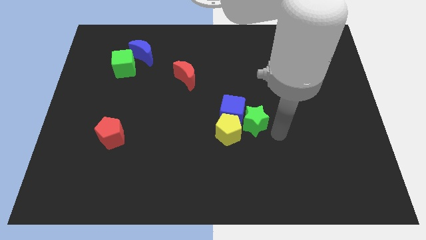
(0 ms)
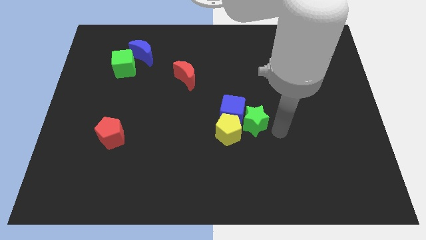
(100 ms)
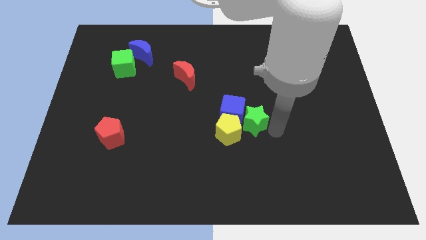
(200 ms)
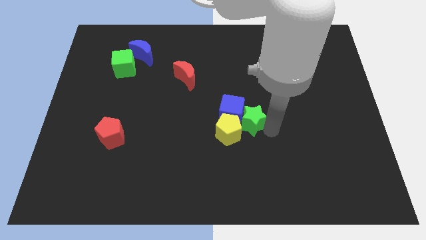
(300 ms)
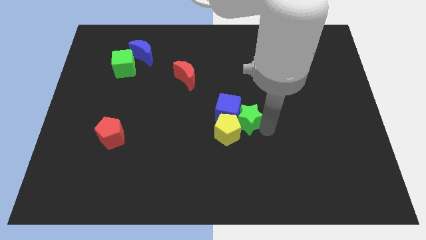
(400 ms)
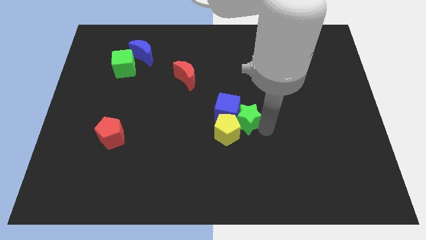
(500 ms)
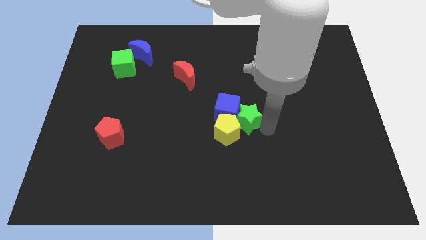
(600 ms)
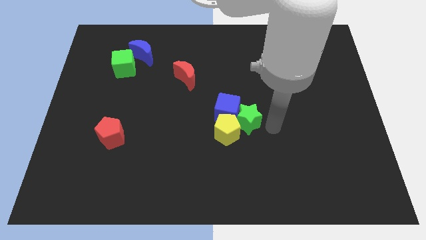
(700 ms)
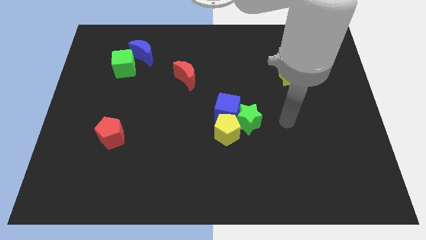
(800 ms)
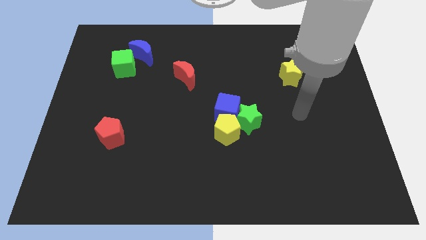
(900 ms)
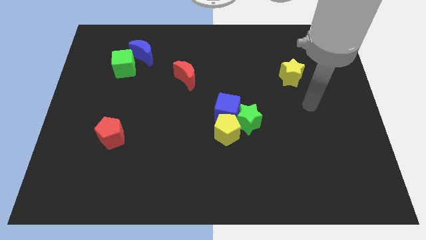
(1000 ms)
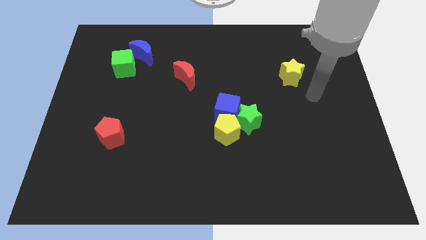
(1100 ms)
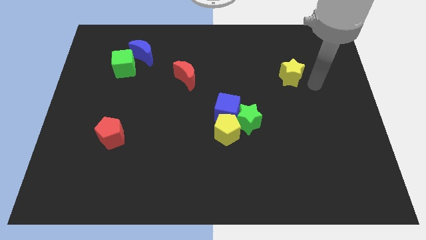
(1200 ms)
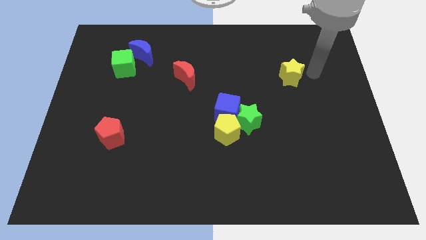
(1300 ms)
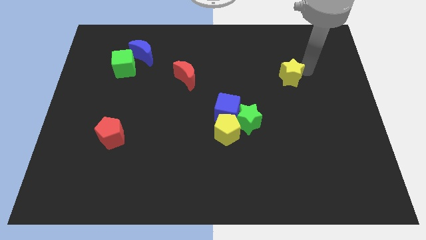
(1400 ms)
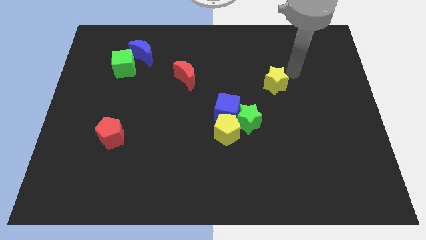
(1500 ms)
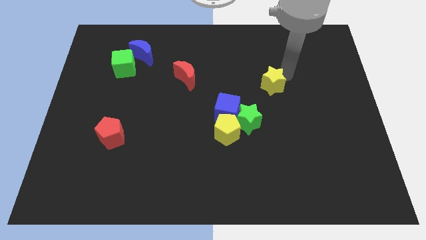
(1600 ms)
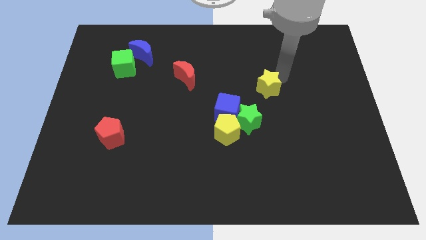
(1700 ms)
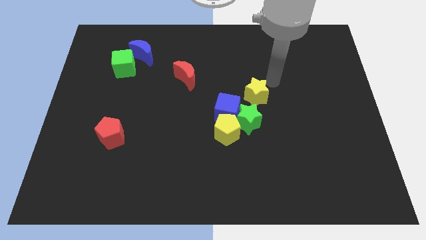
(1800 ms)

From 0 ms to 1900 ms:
move the yellow star to the top of the green star

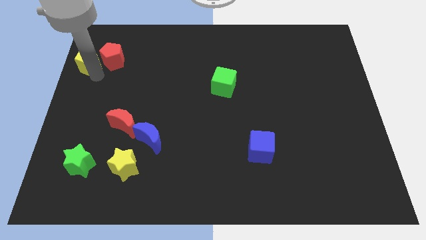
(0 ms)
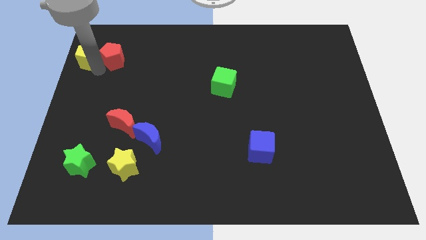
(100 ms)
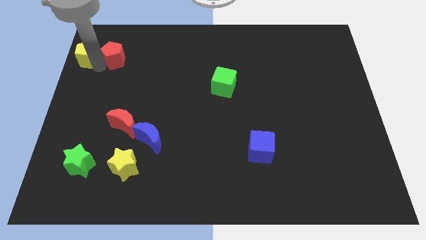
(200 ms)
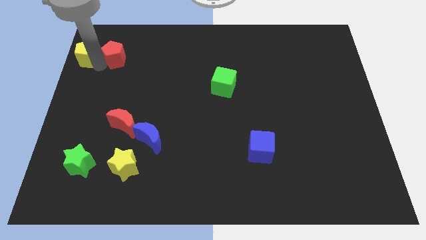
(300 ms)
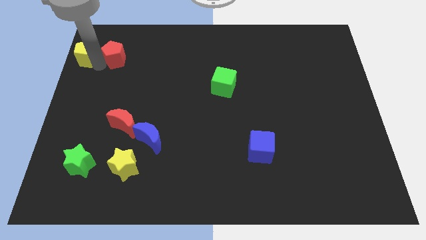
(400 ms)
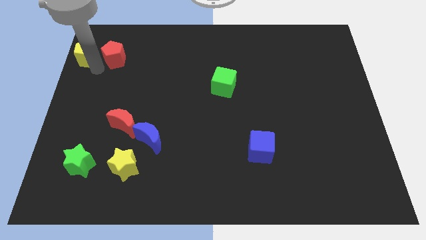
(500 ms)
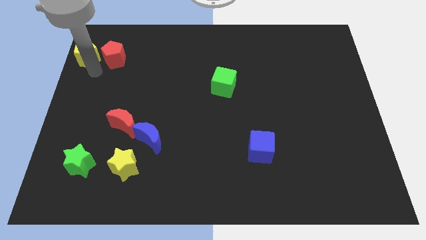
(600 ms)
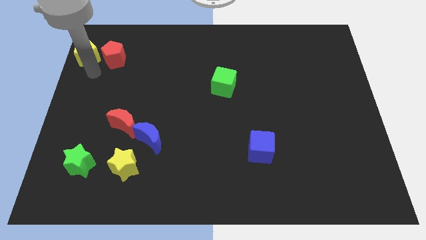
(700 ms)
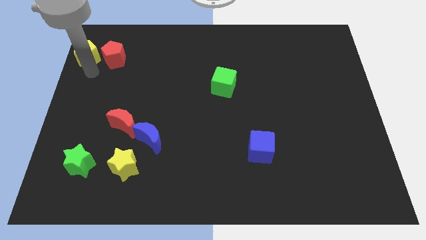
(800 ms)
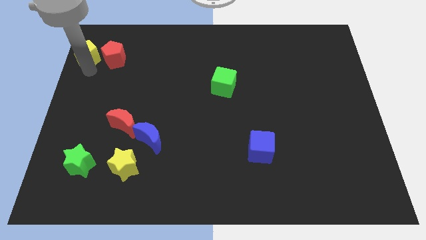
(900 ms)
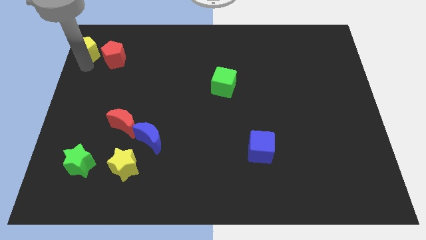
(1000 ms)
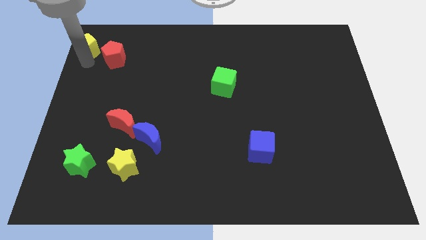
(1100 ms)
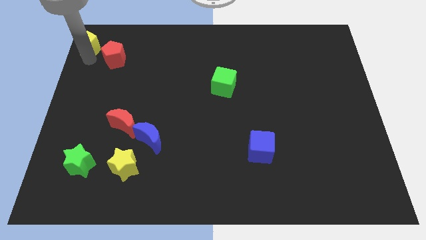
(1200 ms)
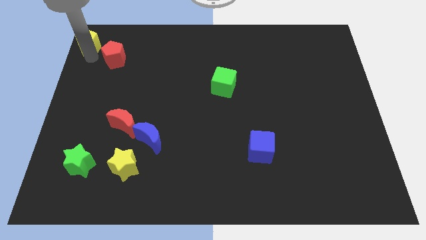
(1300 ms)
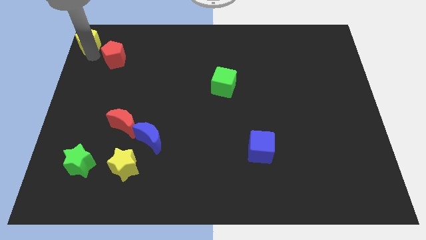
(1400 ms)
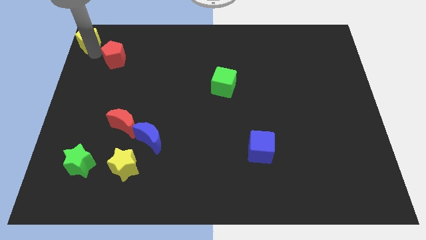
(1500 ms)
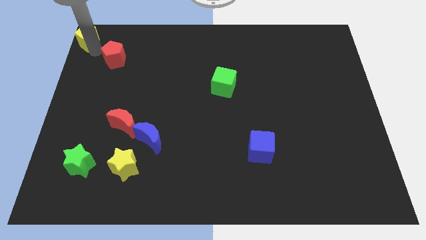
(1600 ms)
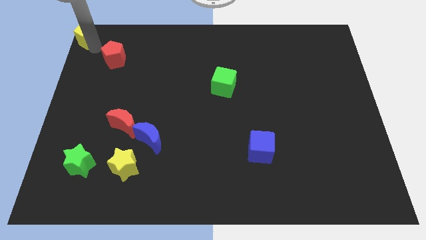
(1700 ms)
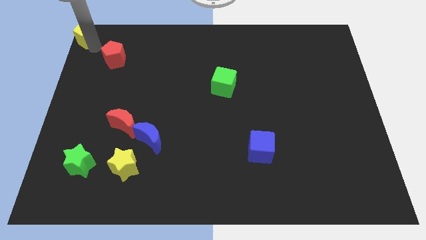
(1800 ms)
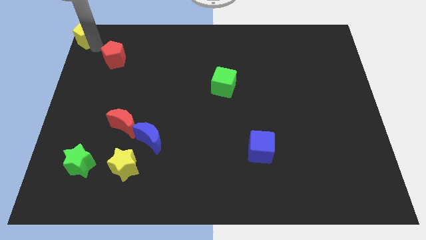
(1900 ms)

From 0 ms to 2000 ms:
place the yellow pentagon at the top left corner

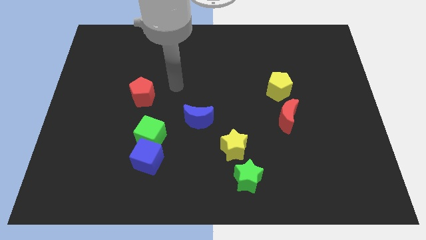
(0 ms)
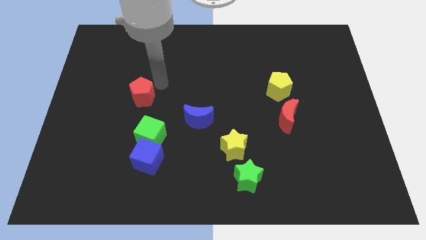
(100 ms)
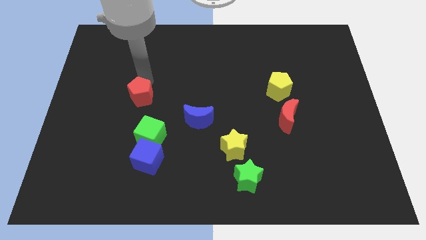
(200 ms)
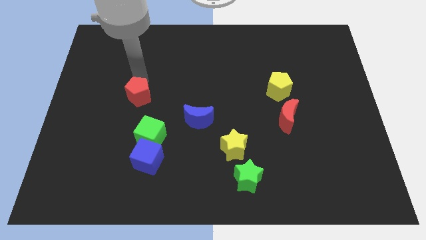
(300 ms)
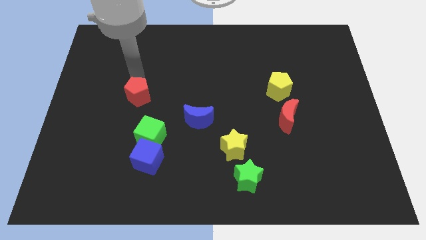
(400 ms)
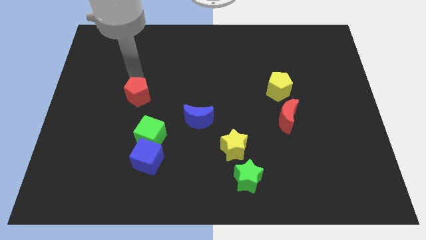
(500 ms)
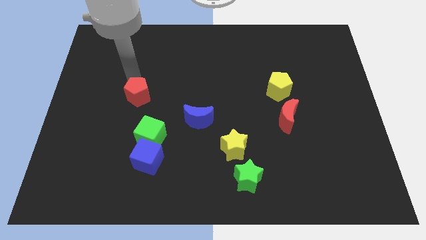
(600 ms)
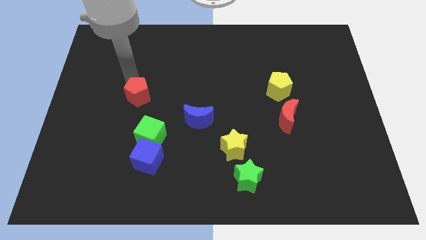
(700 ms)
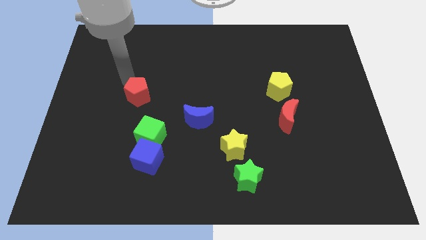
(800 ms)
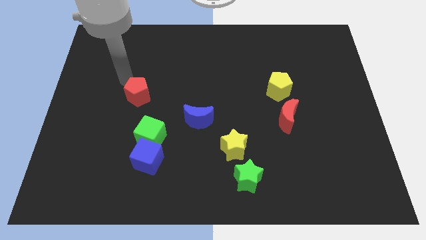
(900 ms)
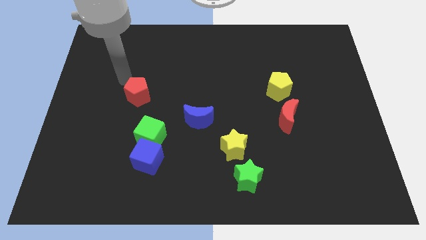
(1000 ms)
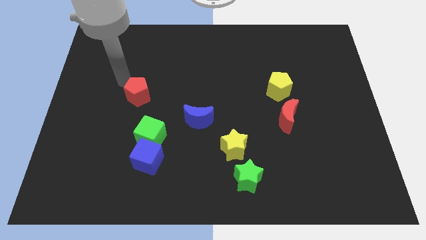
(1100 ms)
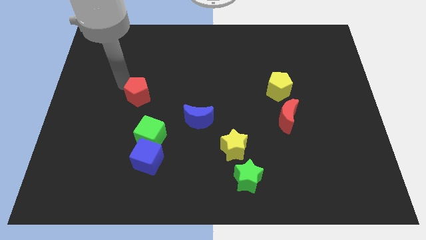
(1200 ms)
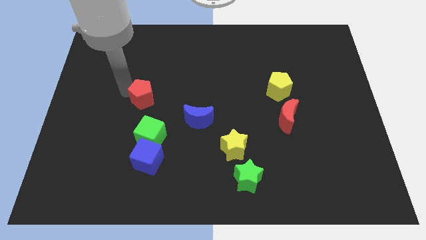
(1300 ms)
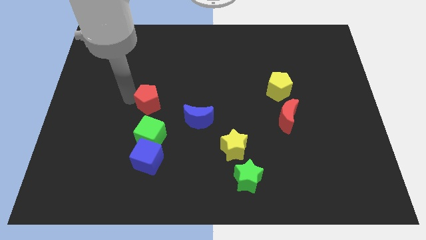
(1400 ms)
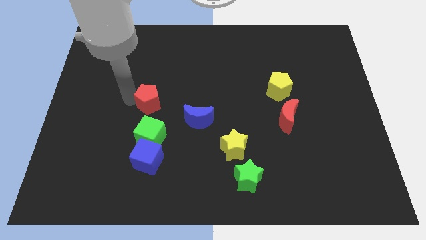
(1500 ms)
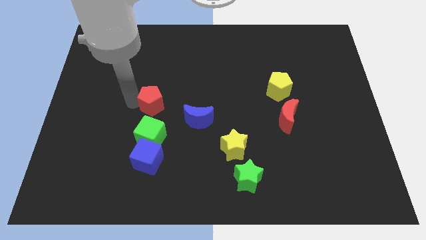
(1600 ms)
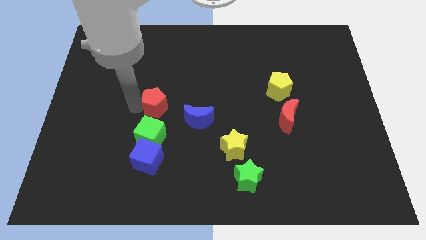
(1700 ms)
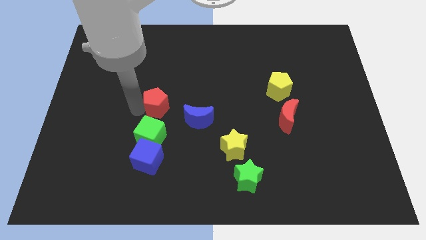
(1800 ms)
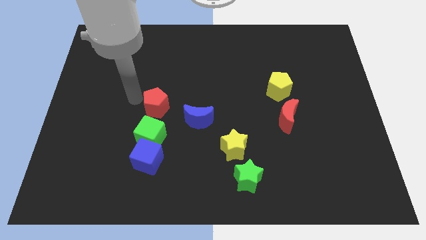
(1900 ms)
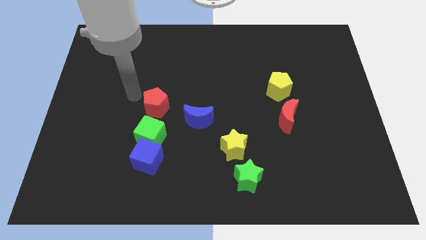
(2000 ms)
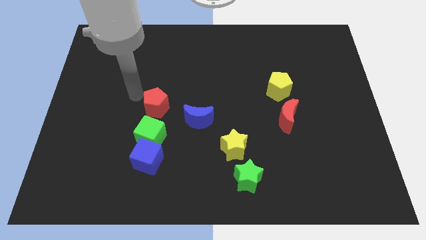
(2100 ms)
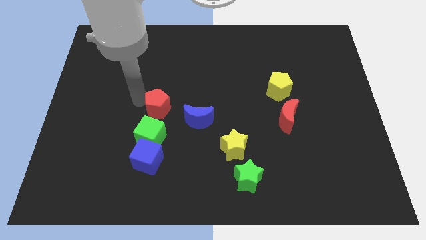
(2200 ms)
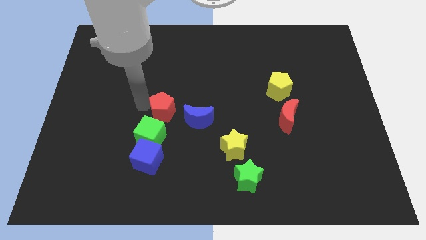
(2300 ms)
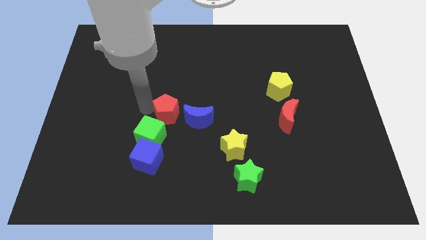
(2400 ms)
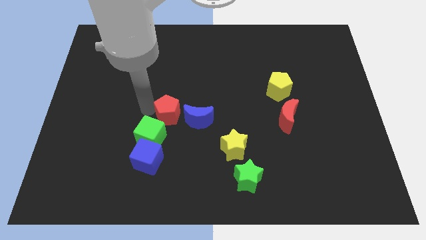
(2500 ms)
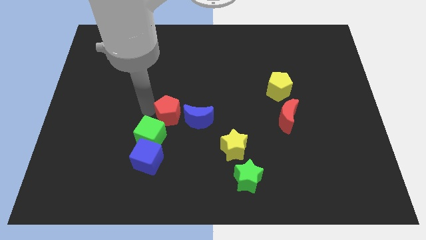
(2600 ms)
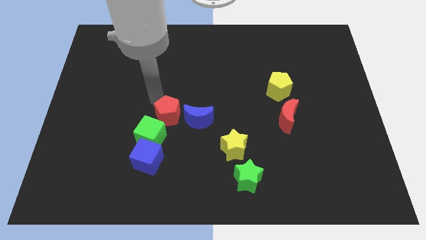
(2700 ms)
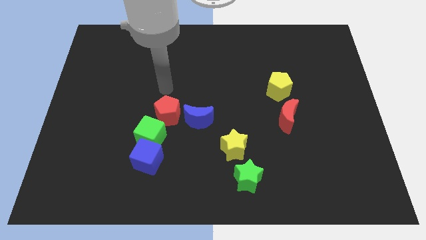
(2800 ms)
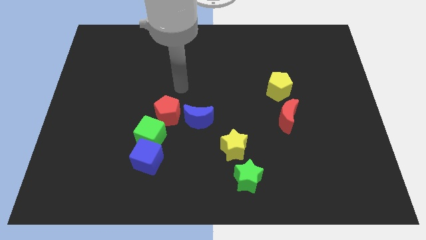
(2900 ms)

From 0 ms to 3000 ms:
put the red pentagon to the left side of blue crescent

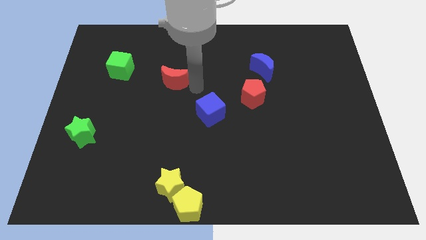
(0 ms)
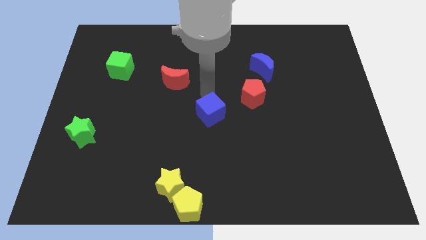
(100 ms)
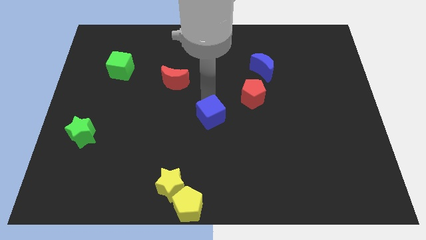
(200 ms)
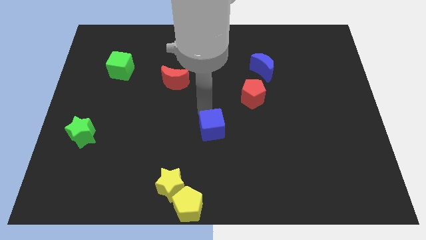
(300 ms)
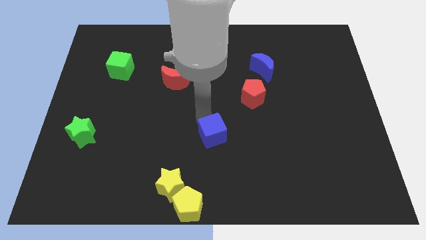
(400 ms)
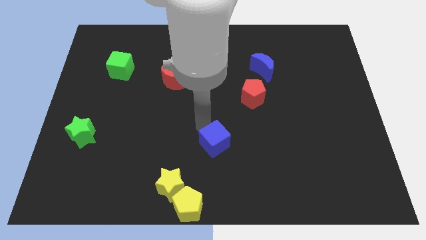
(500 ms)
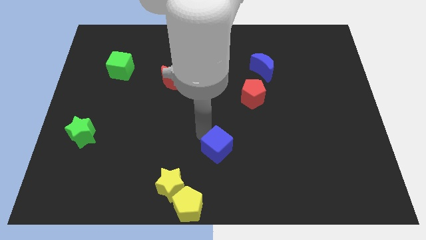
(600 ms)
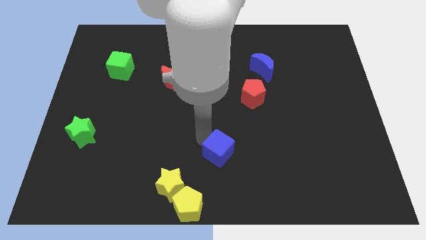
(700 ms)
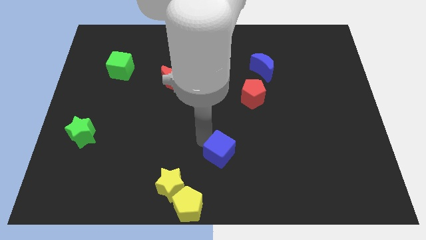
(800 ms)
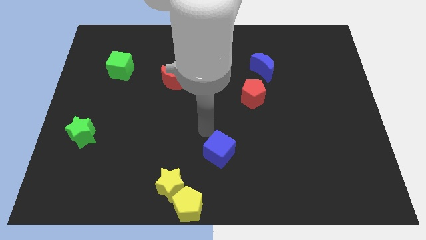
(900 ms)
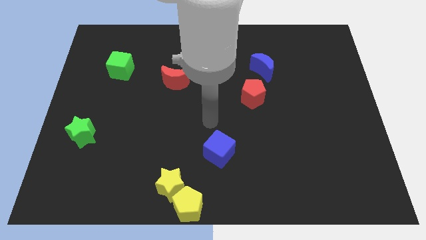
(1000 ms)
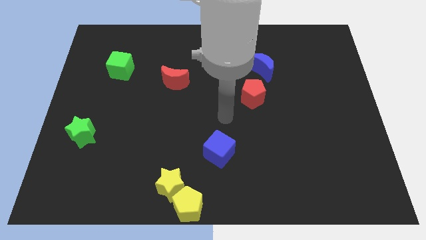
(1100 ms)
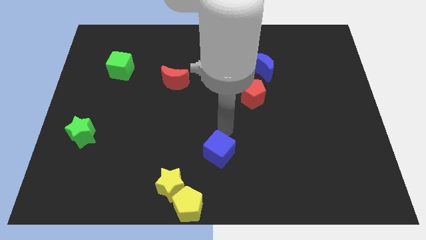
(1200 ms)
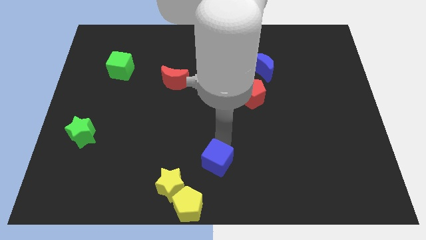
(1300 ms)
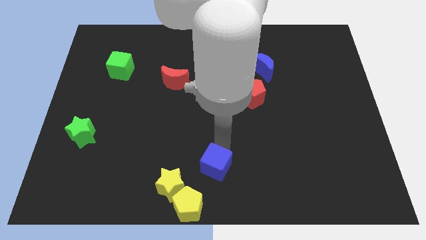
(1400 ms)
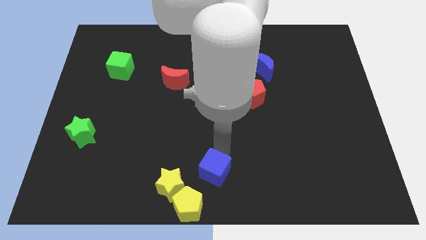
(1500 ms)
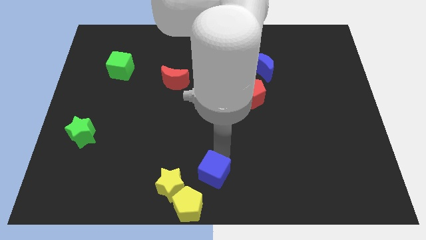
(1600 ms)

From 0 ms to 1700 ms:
drag the blue cube to the right of the yellow star

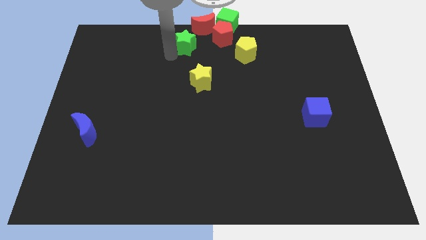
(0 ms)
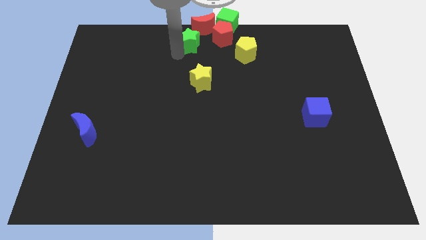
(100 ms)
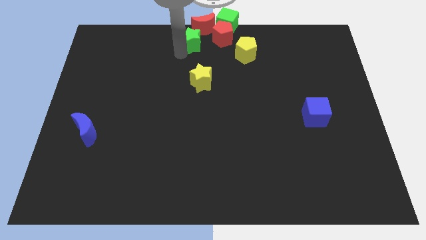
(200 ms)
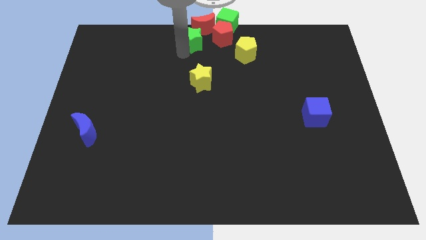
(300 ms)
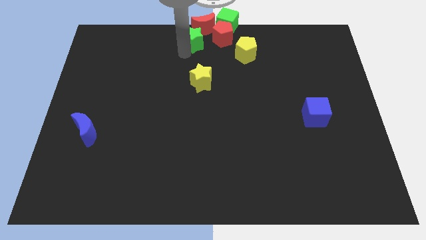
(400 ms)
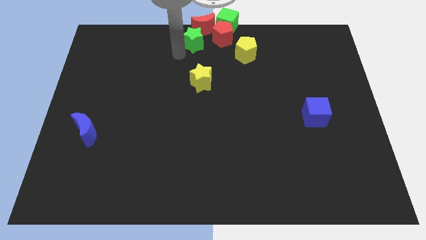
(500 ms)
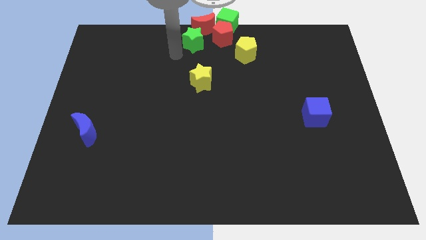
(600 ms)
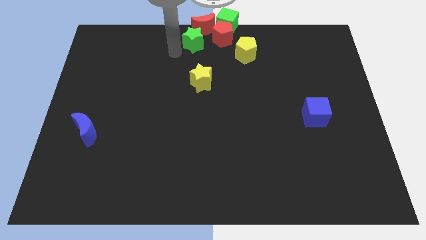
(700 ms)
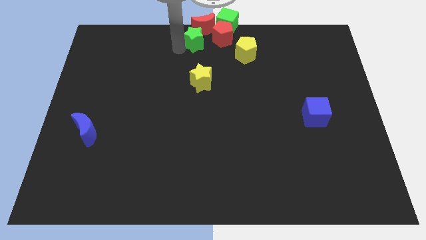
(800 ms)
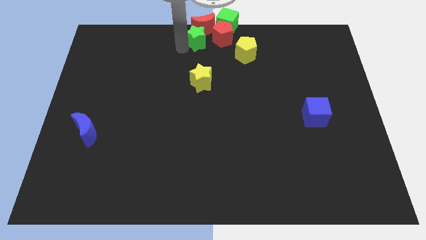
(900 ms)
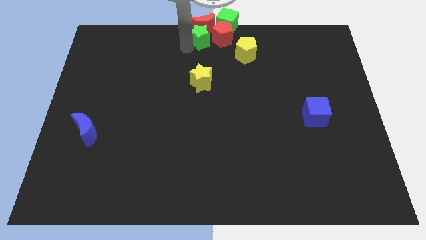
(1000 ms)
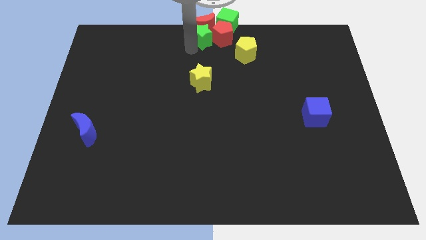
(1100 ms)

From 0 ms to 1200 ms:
move the green star below the red crescent
